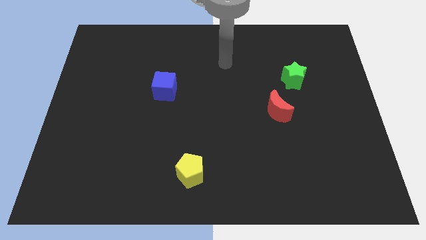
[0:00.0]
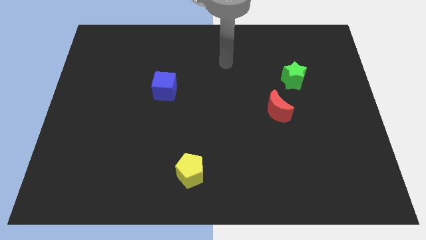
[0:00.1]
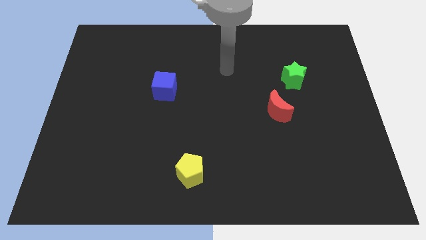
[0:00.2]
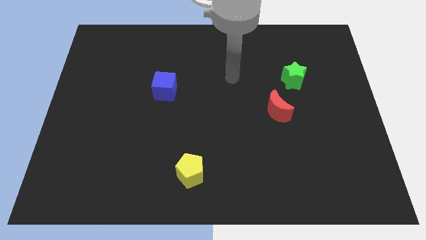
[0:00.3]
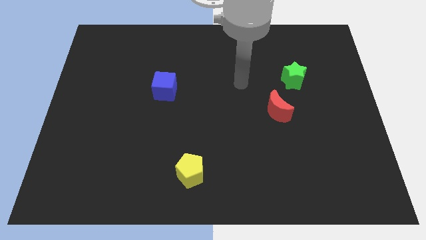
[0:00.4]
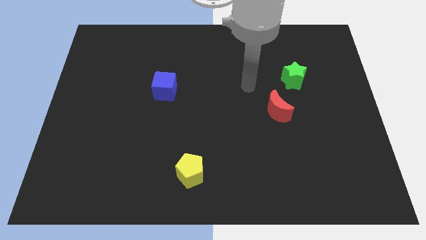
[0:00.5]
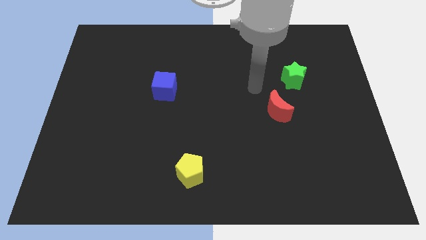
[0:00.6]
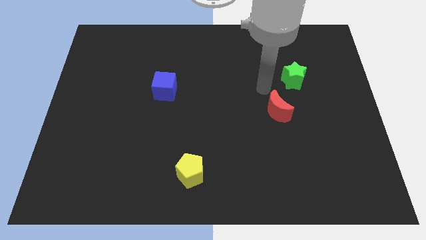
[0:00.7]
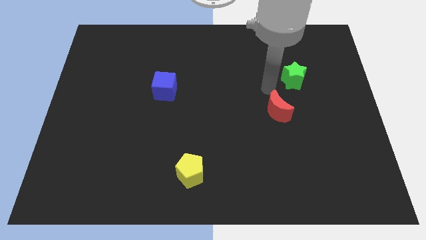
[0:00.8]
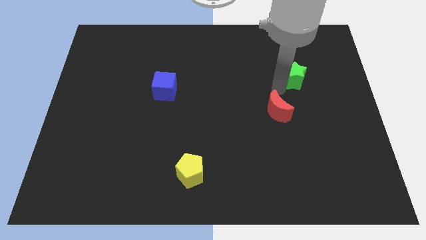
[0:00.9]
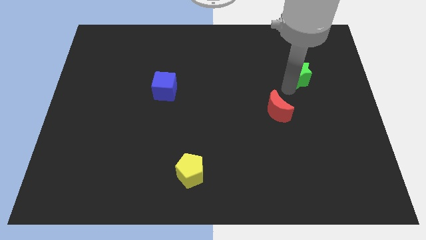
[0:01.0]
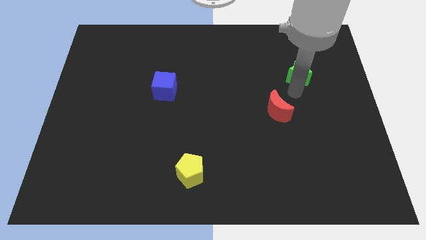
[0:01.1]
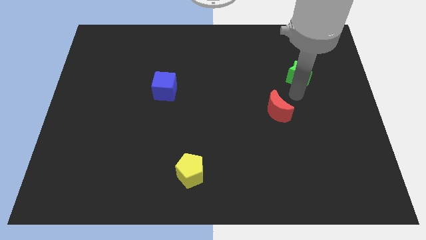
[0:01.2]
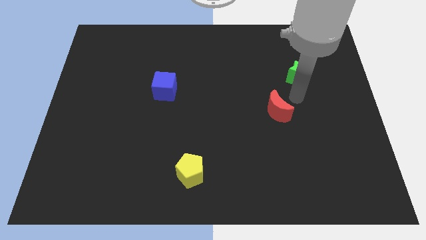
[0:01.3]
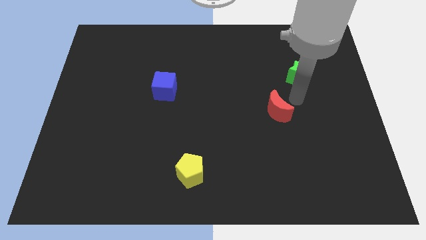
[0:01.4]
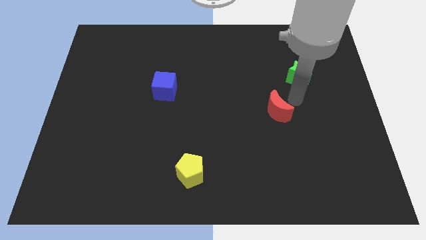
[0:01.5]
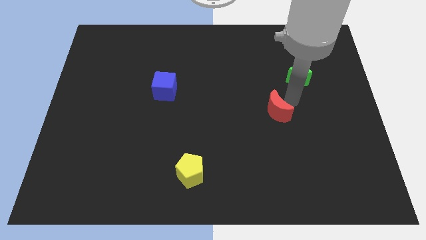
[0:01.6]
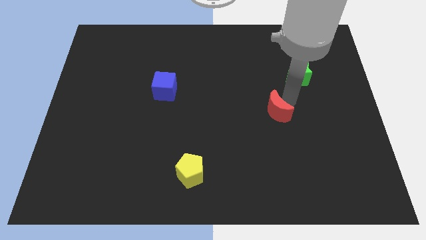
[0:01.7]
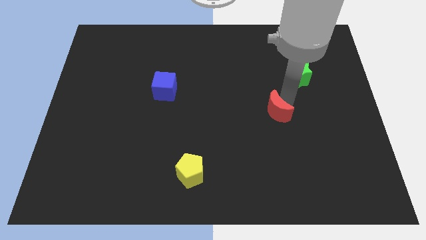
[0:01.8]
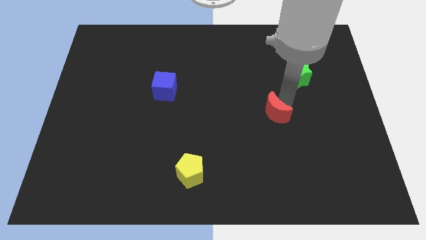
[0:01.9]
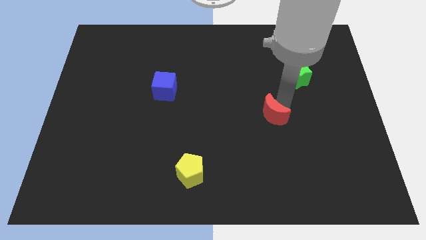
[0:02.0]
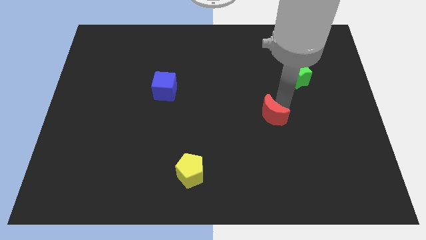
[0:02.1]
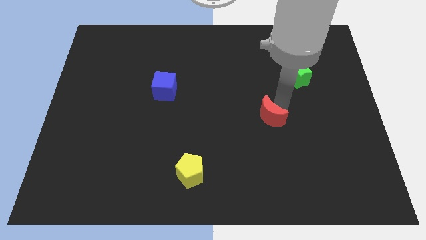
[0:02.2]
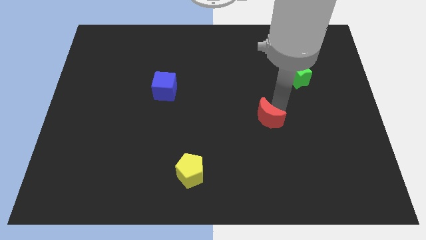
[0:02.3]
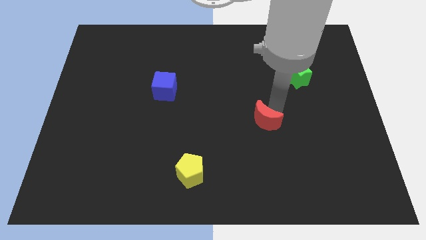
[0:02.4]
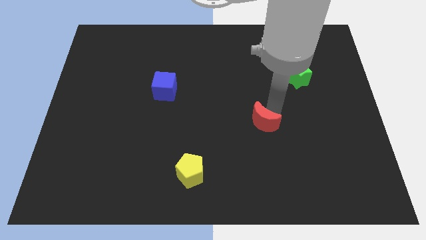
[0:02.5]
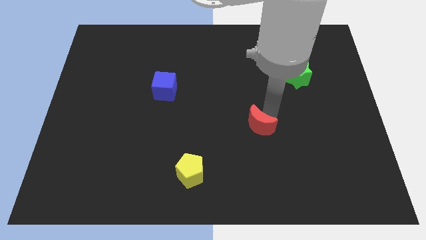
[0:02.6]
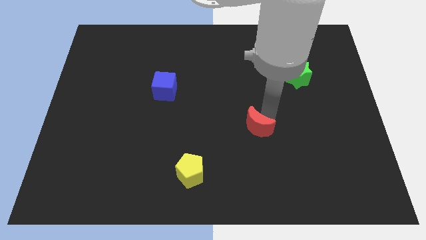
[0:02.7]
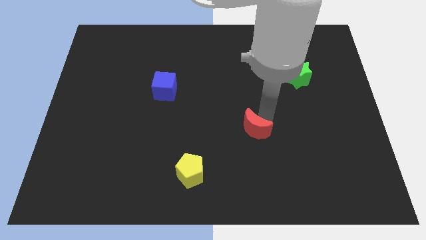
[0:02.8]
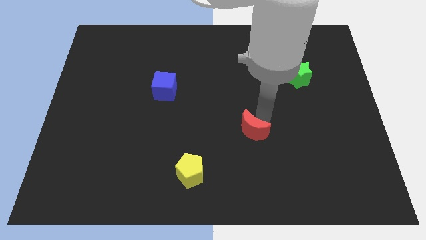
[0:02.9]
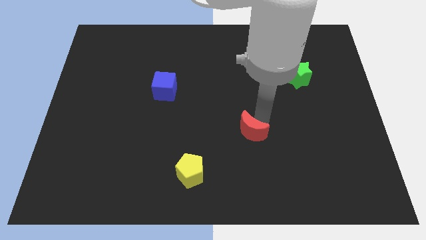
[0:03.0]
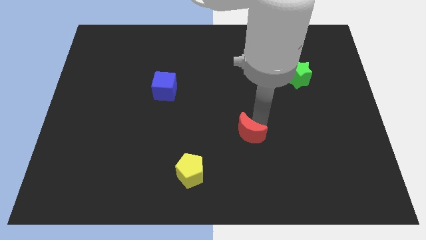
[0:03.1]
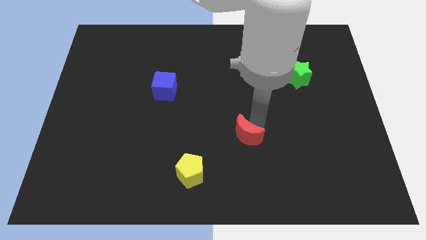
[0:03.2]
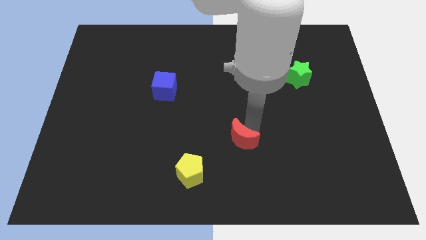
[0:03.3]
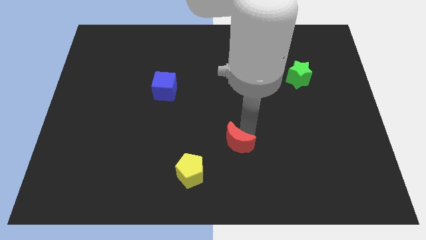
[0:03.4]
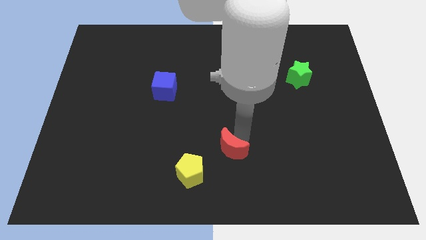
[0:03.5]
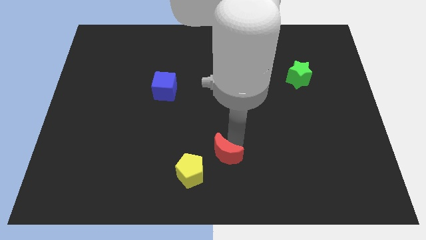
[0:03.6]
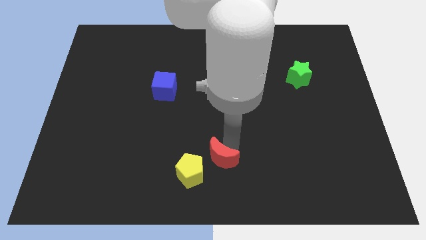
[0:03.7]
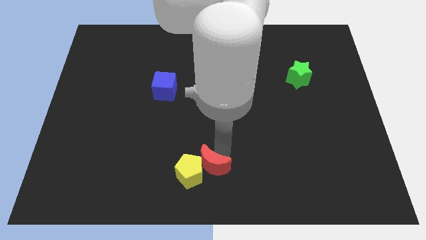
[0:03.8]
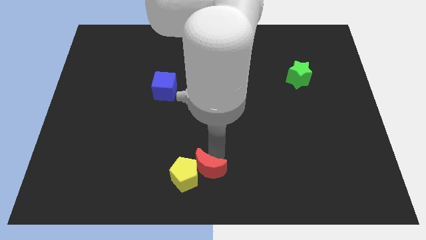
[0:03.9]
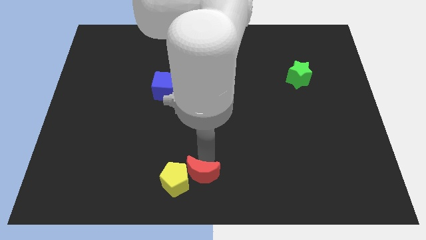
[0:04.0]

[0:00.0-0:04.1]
put the red moon next to the yellow block

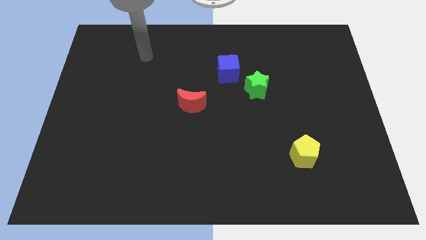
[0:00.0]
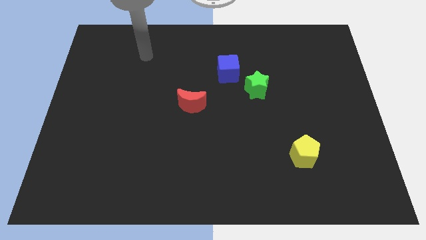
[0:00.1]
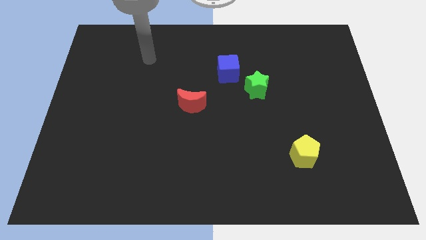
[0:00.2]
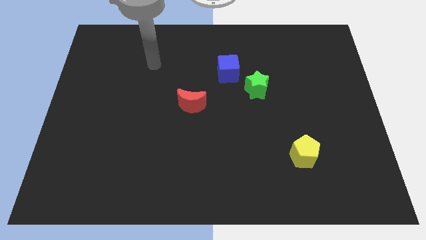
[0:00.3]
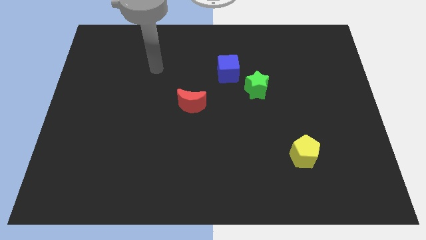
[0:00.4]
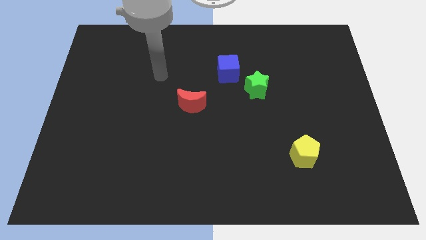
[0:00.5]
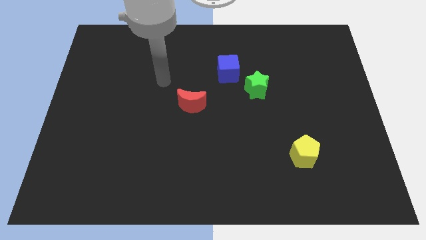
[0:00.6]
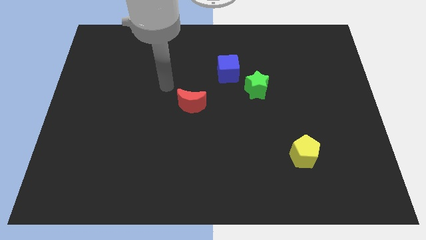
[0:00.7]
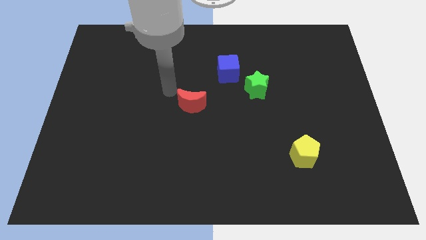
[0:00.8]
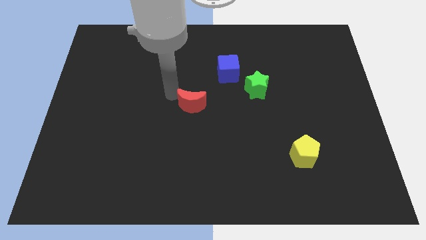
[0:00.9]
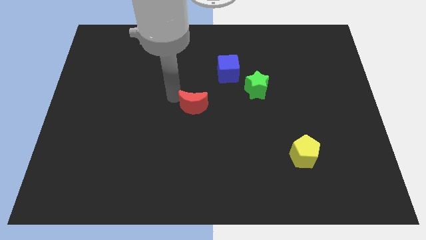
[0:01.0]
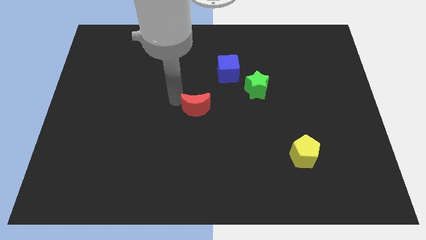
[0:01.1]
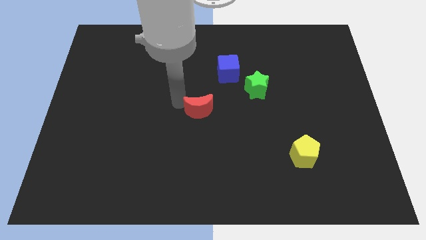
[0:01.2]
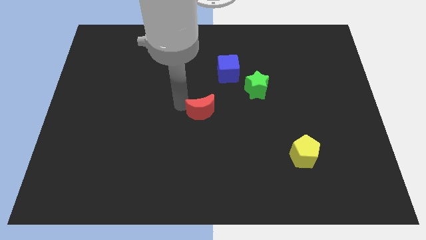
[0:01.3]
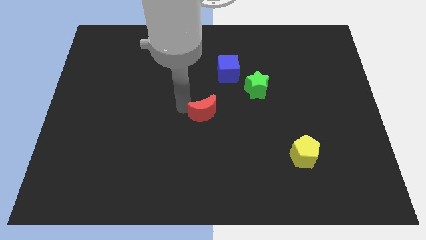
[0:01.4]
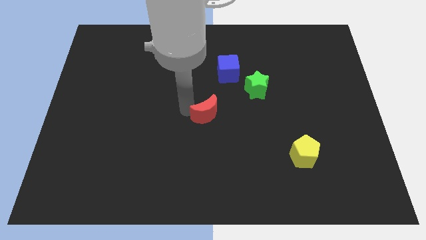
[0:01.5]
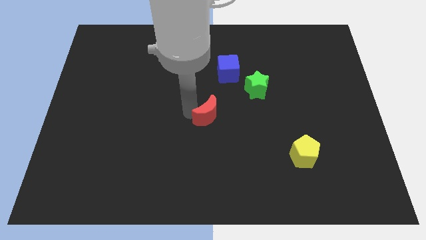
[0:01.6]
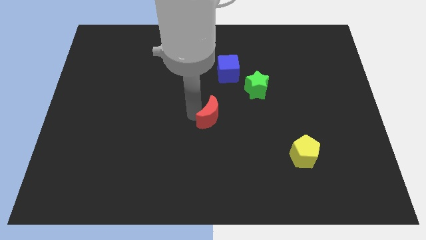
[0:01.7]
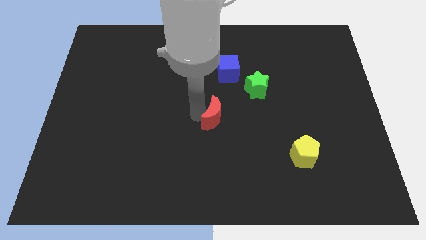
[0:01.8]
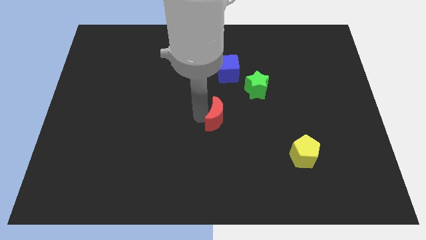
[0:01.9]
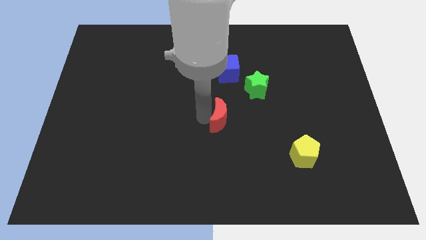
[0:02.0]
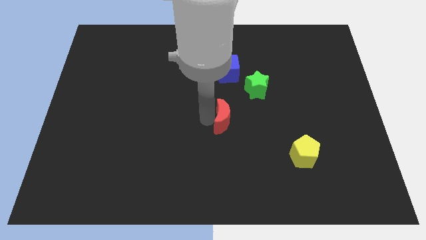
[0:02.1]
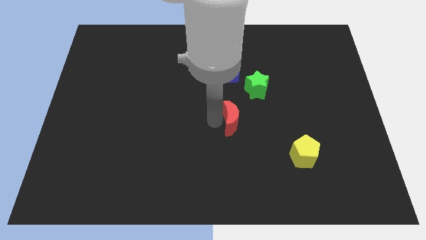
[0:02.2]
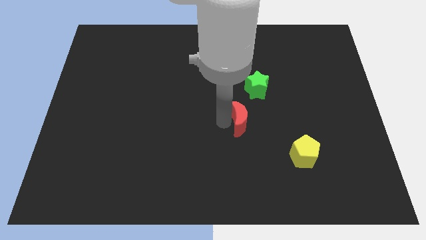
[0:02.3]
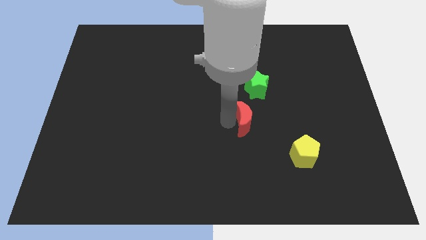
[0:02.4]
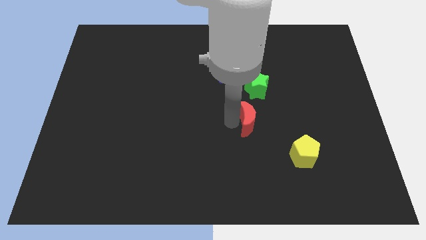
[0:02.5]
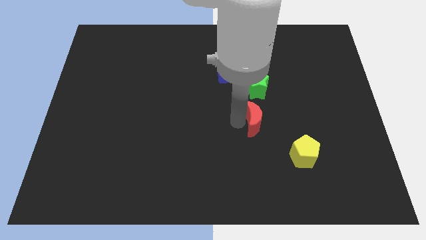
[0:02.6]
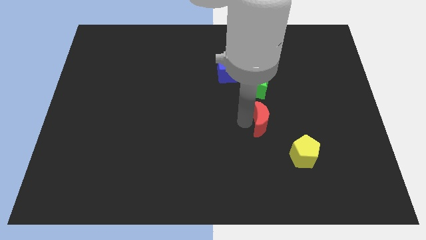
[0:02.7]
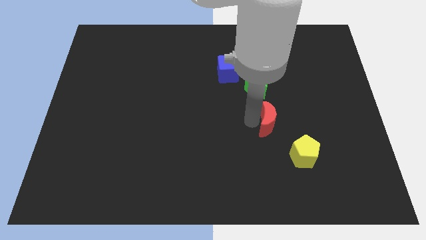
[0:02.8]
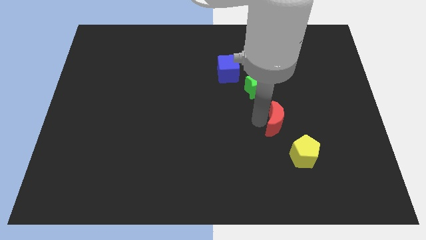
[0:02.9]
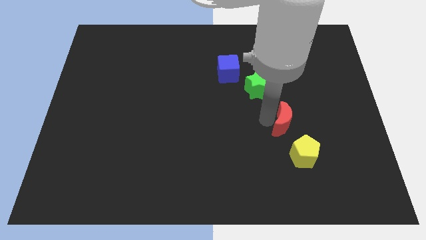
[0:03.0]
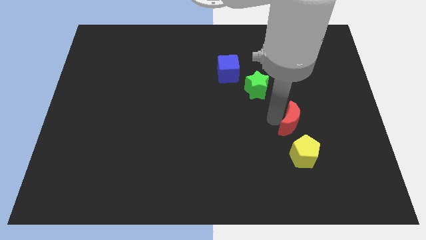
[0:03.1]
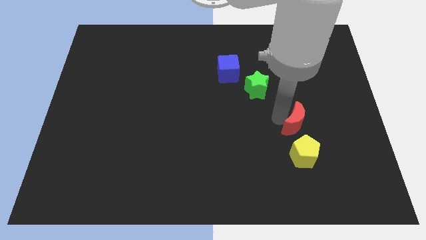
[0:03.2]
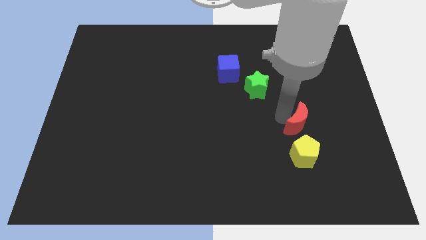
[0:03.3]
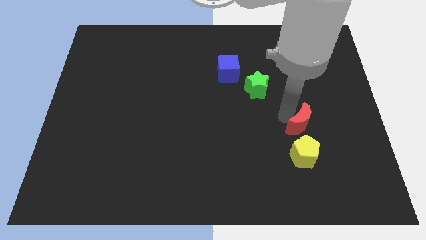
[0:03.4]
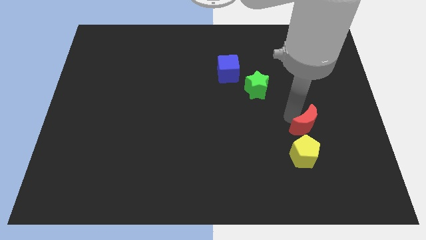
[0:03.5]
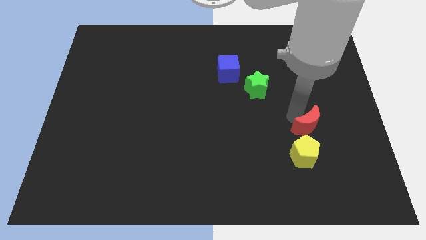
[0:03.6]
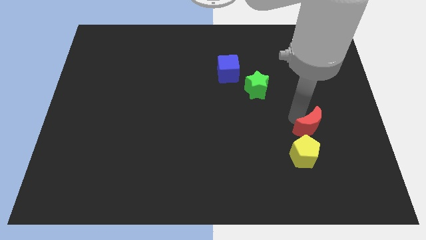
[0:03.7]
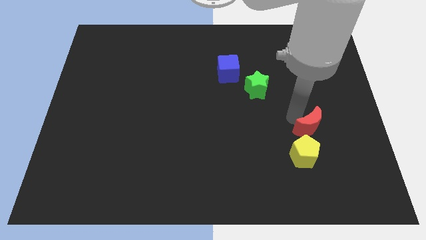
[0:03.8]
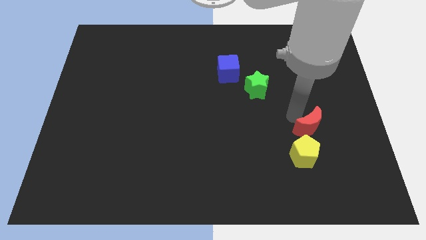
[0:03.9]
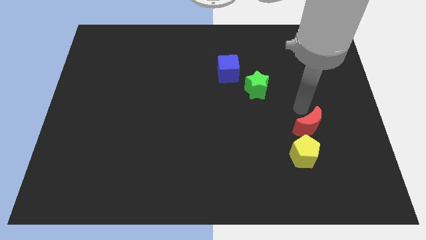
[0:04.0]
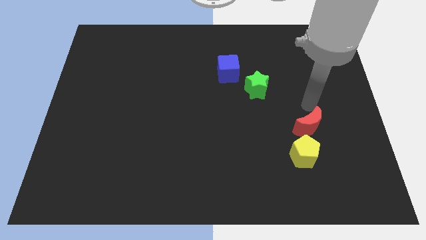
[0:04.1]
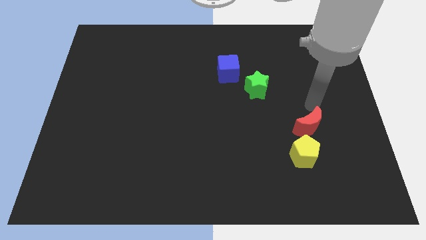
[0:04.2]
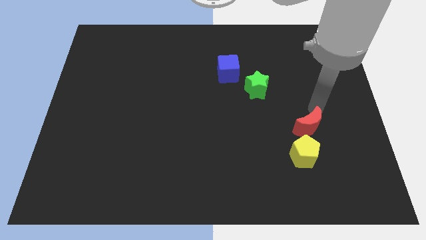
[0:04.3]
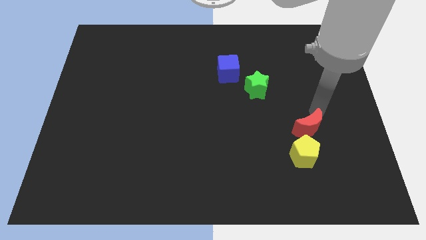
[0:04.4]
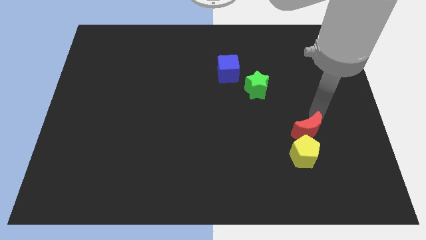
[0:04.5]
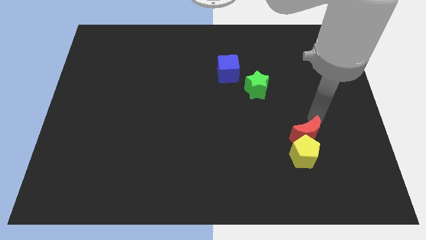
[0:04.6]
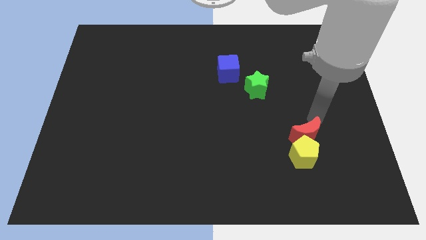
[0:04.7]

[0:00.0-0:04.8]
push the red moon to the yellow block
